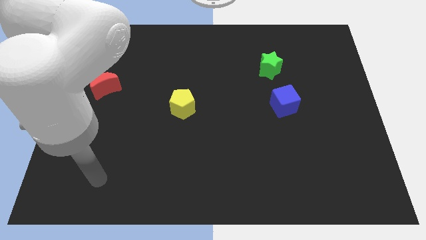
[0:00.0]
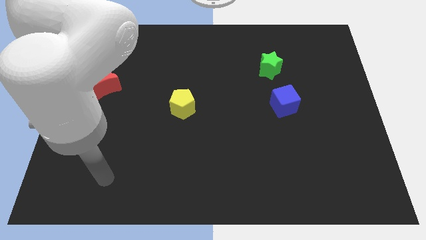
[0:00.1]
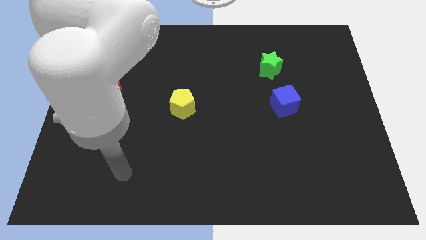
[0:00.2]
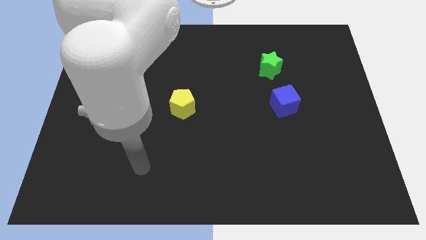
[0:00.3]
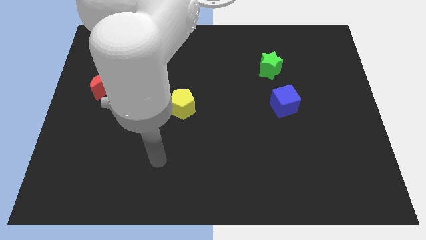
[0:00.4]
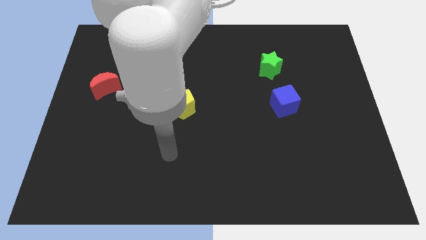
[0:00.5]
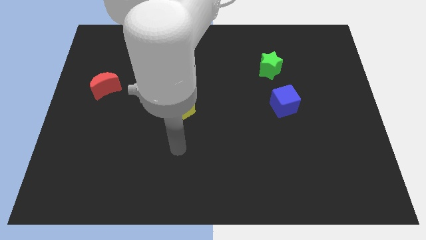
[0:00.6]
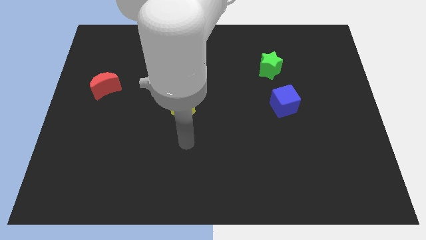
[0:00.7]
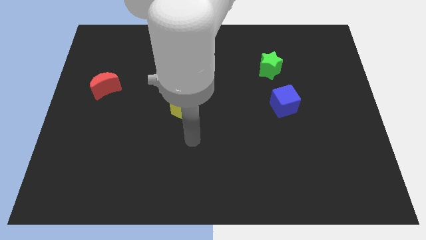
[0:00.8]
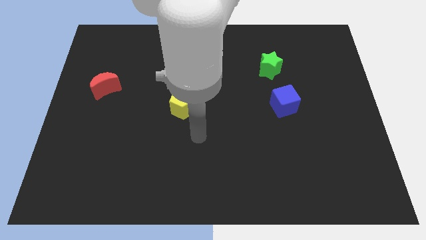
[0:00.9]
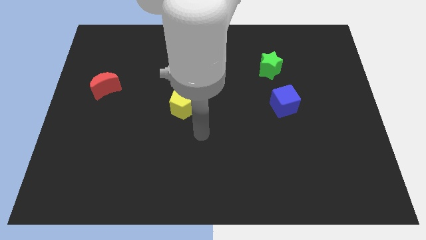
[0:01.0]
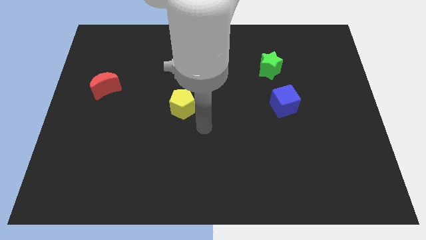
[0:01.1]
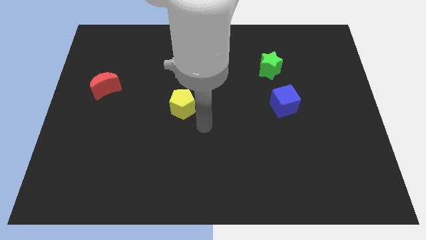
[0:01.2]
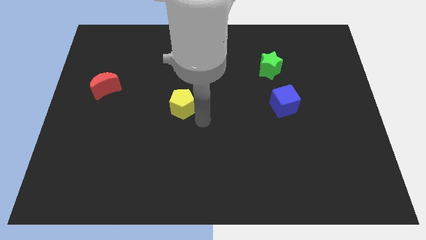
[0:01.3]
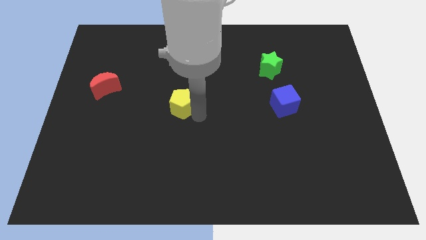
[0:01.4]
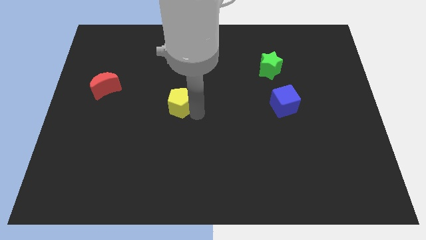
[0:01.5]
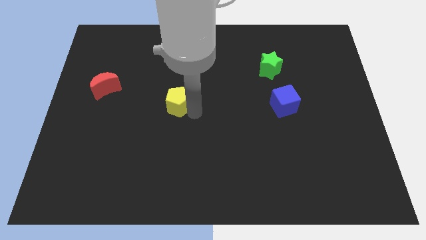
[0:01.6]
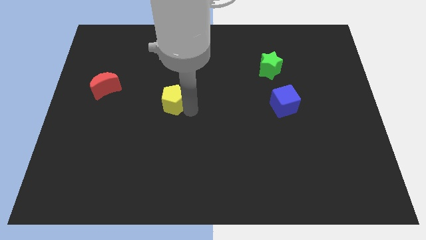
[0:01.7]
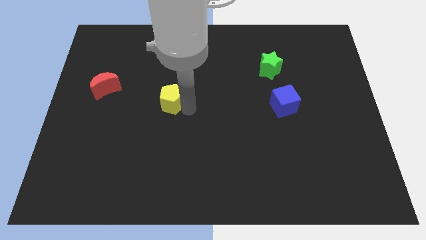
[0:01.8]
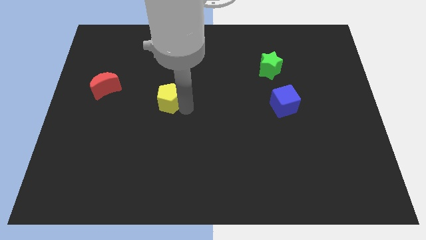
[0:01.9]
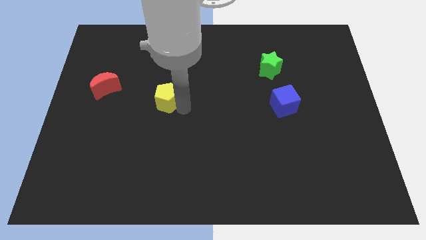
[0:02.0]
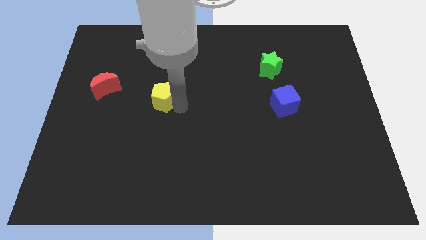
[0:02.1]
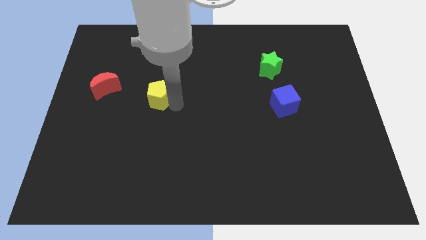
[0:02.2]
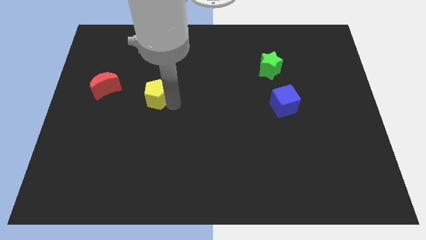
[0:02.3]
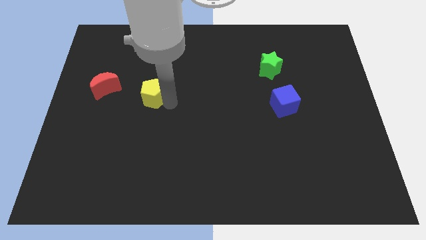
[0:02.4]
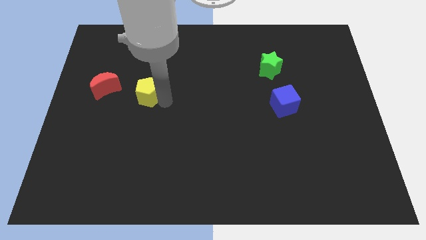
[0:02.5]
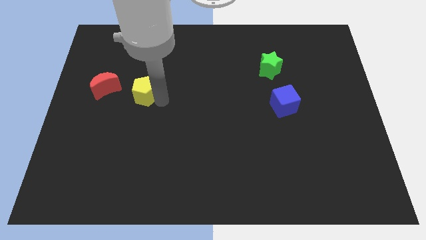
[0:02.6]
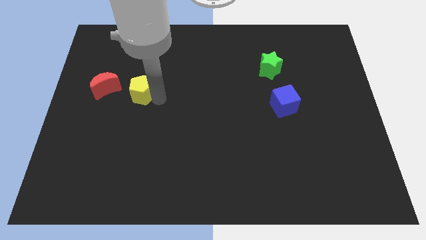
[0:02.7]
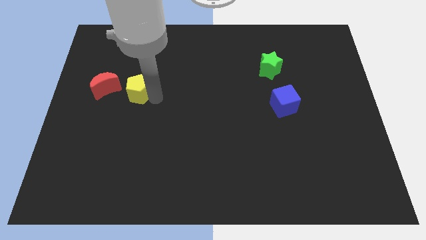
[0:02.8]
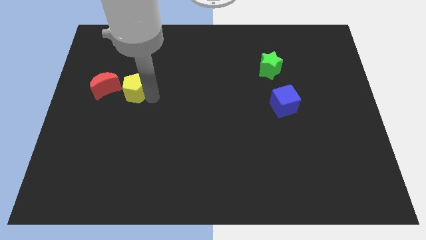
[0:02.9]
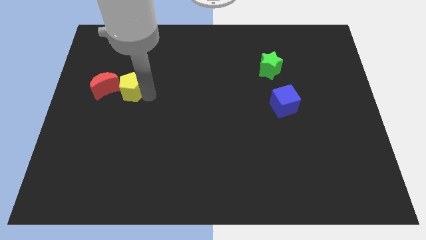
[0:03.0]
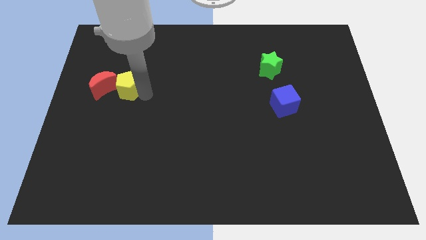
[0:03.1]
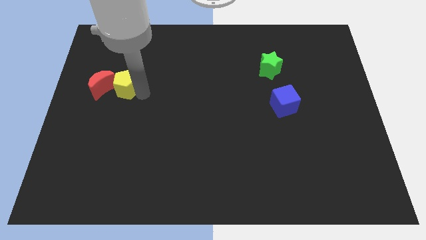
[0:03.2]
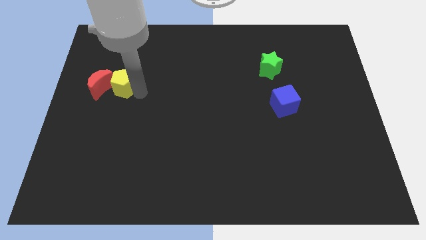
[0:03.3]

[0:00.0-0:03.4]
move the yellow pentagon next to the moon

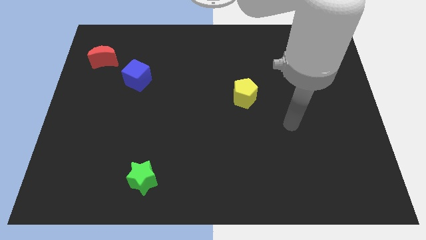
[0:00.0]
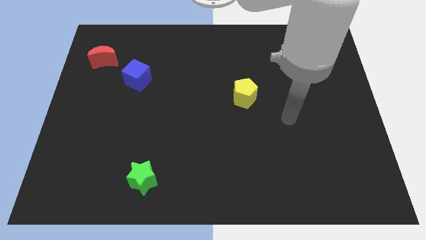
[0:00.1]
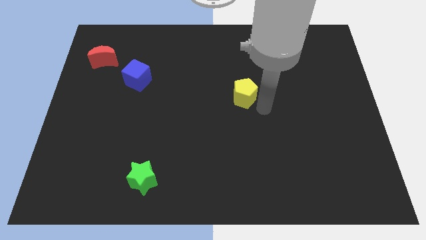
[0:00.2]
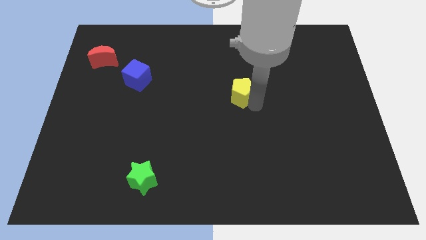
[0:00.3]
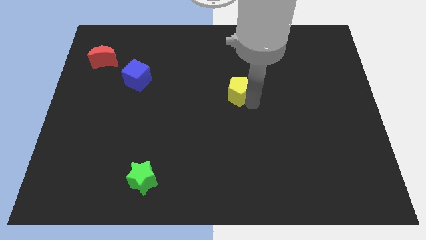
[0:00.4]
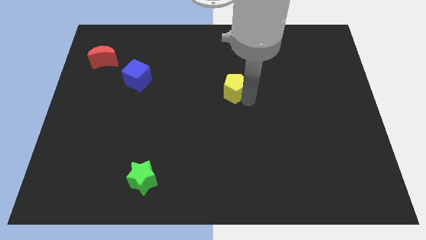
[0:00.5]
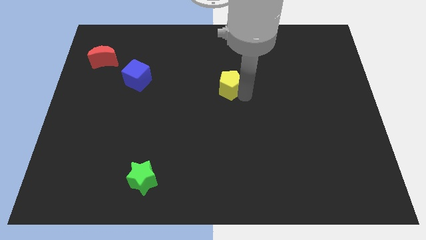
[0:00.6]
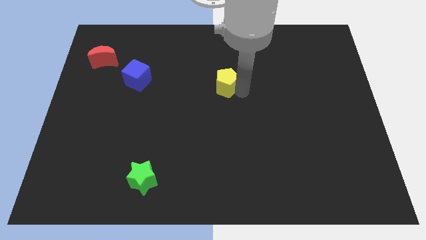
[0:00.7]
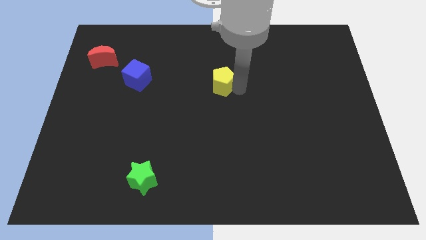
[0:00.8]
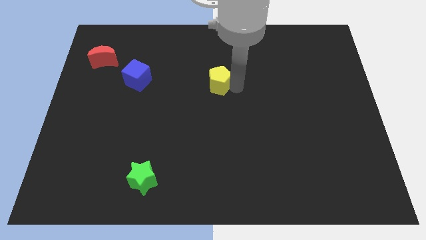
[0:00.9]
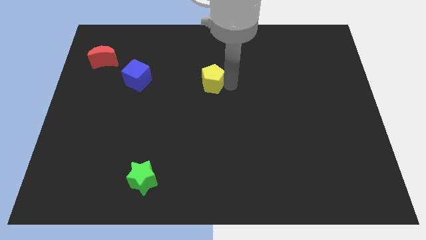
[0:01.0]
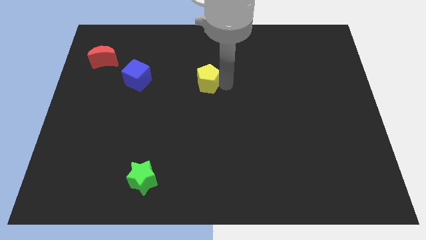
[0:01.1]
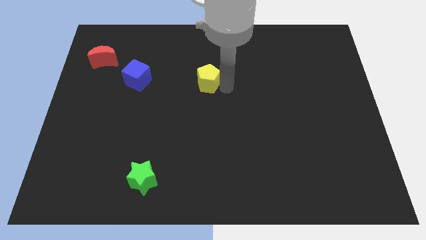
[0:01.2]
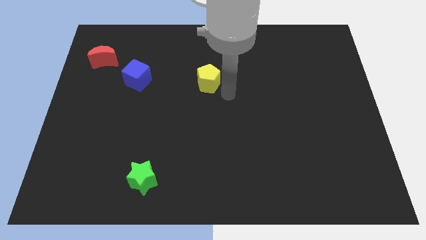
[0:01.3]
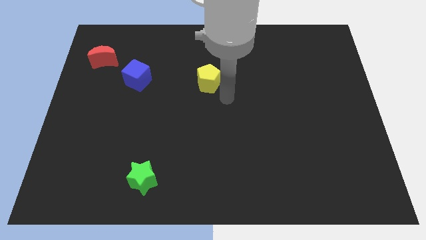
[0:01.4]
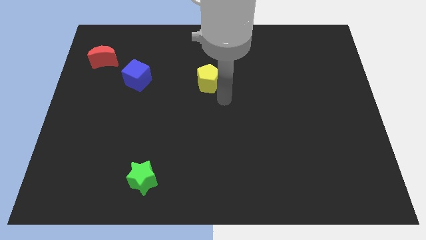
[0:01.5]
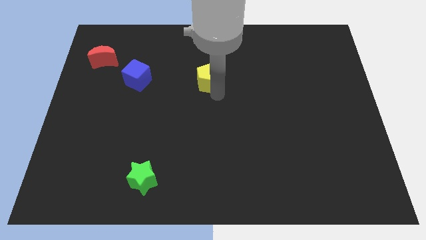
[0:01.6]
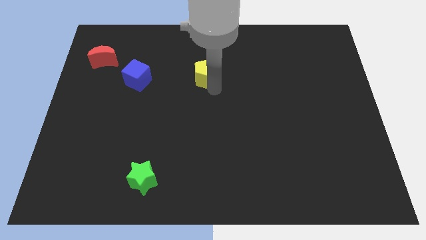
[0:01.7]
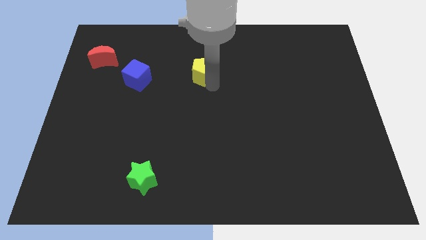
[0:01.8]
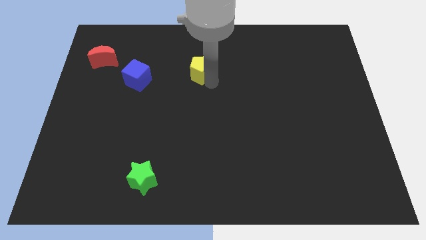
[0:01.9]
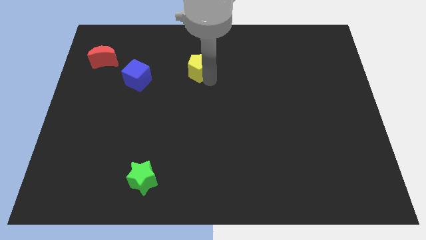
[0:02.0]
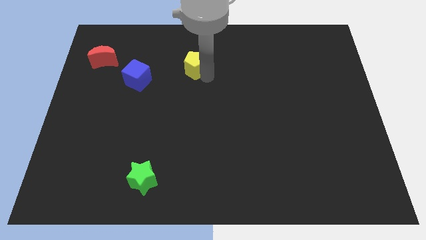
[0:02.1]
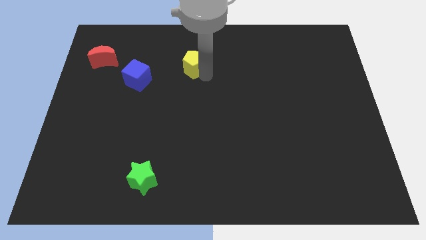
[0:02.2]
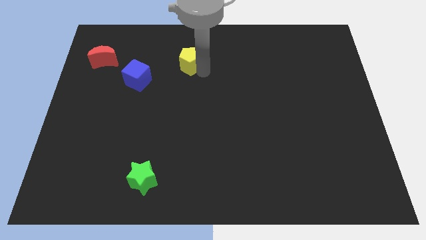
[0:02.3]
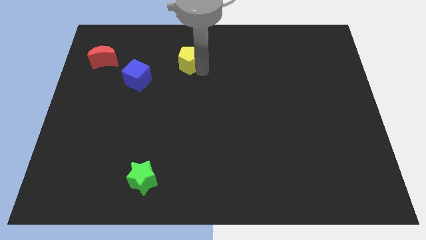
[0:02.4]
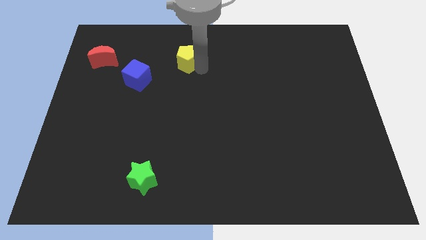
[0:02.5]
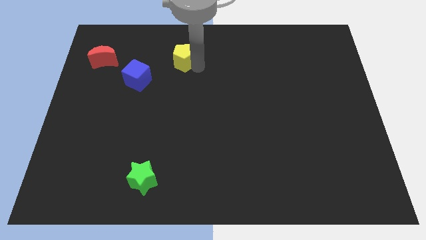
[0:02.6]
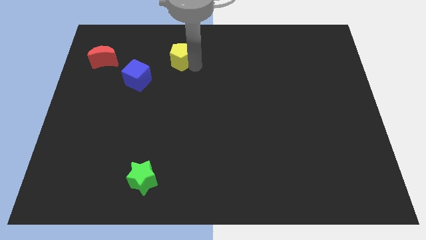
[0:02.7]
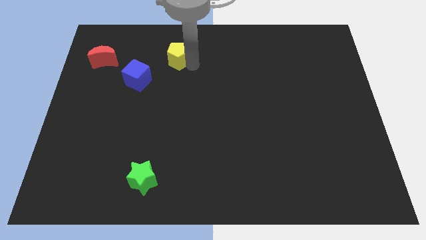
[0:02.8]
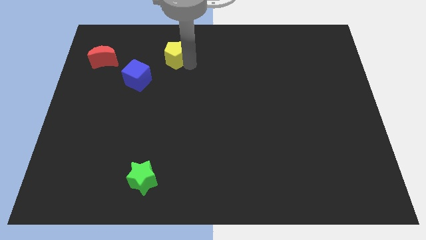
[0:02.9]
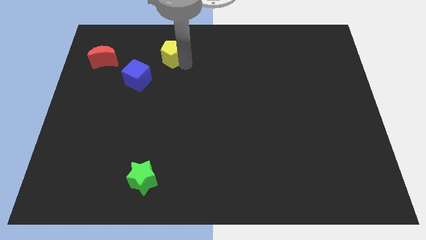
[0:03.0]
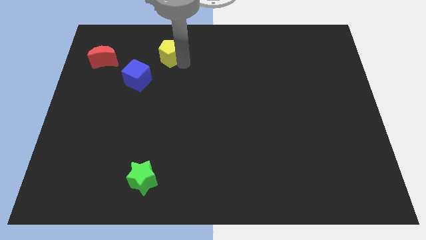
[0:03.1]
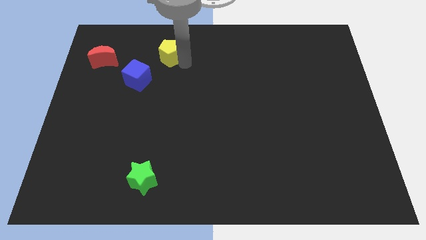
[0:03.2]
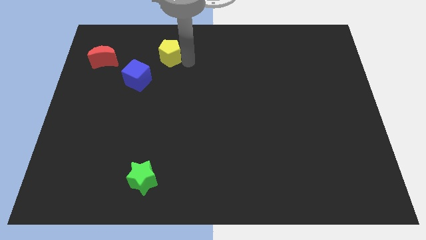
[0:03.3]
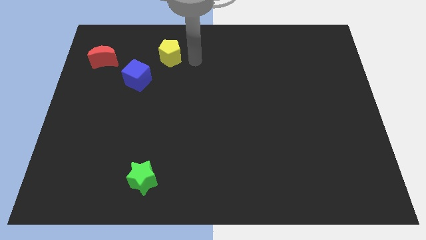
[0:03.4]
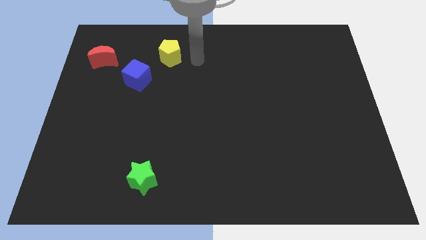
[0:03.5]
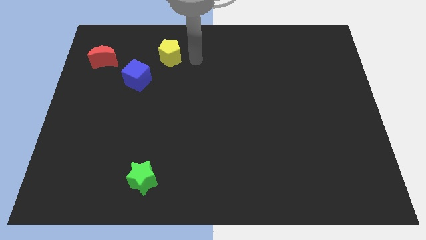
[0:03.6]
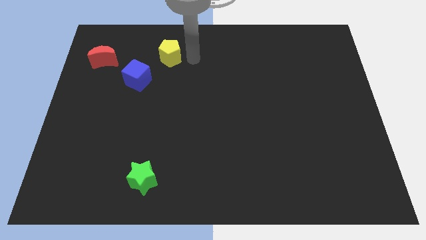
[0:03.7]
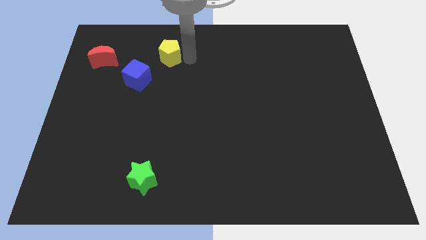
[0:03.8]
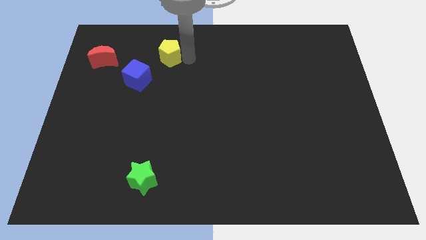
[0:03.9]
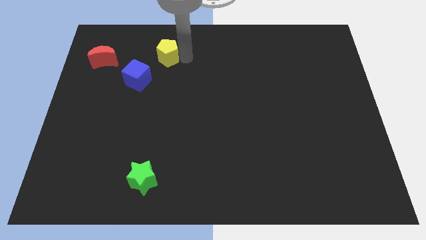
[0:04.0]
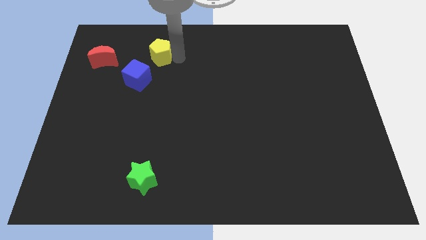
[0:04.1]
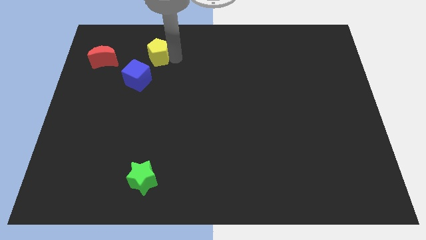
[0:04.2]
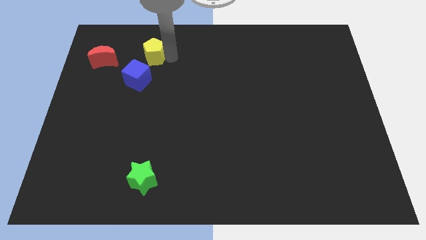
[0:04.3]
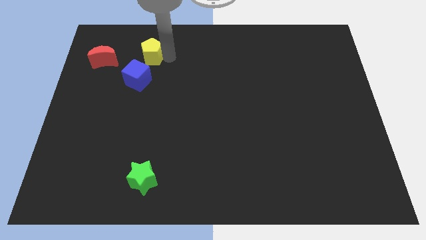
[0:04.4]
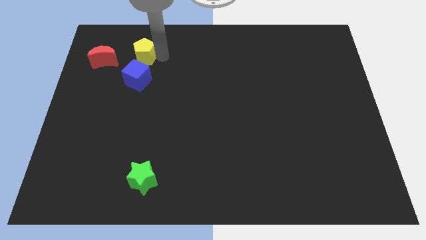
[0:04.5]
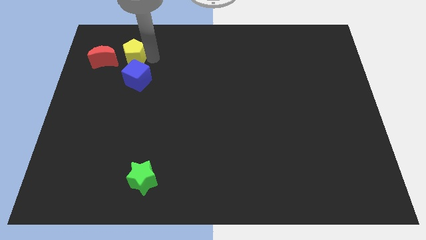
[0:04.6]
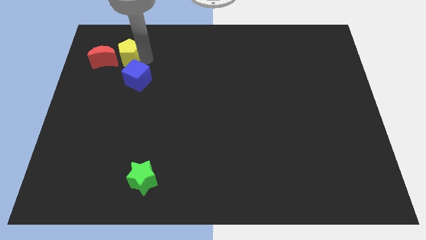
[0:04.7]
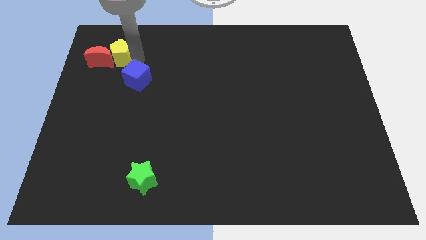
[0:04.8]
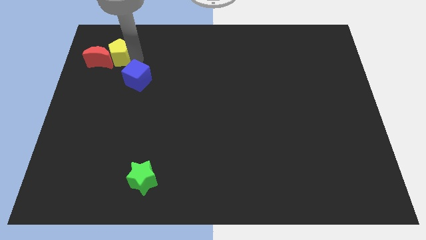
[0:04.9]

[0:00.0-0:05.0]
slide the pentagon to the red block

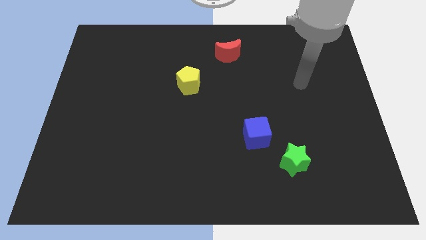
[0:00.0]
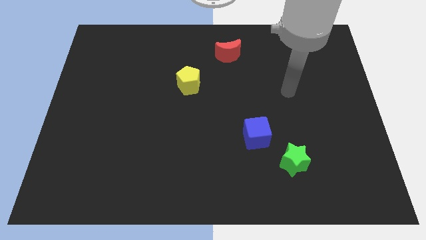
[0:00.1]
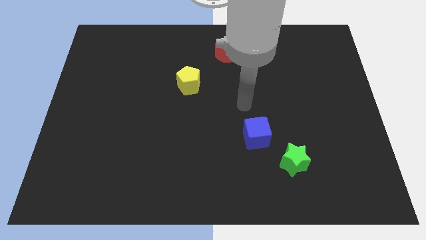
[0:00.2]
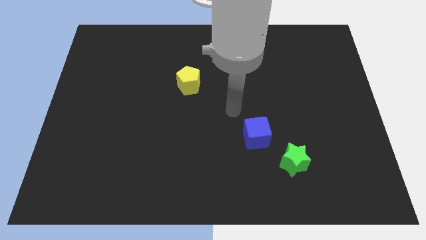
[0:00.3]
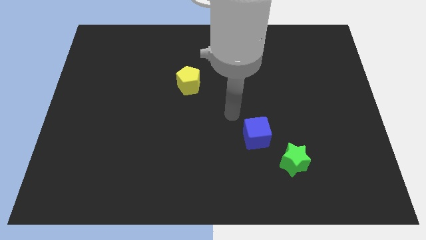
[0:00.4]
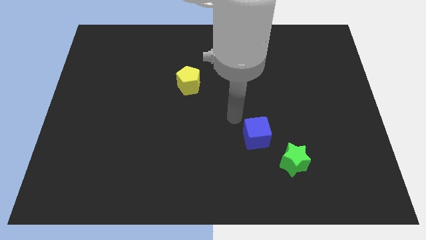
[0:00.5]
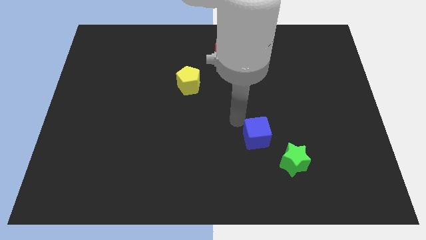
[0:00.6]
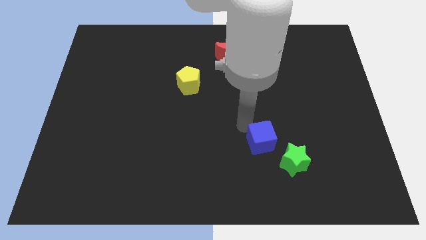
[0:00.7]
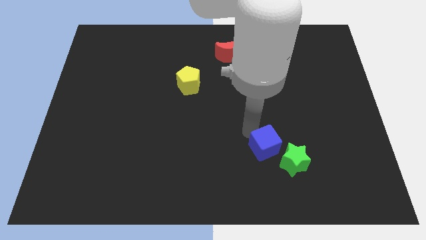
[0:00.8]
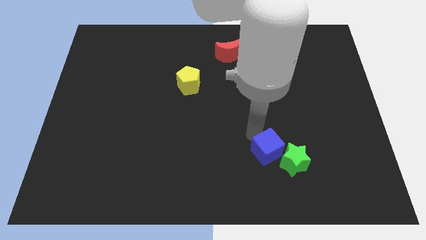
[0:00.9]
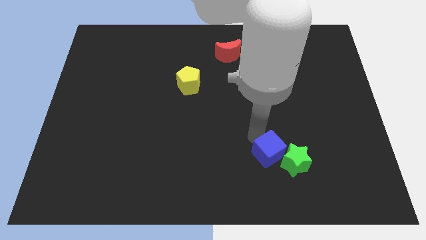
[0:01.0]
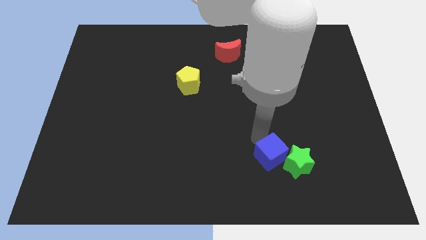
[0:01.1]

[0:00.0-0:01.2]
put the blue block towards the green star
